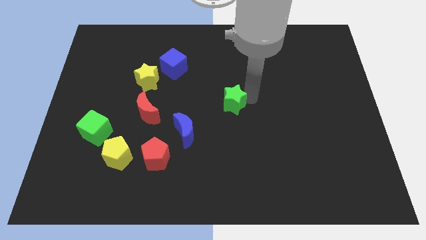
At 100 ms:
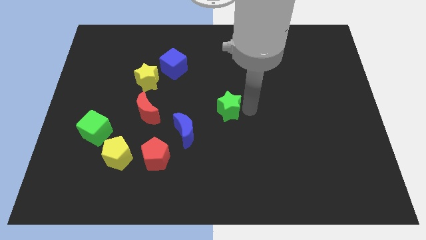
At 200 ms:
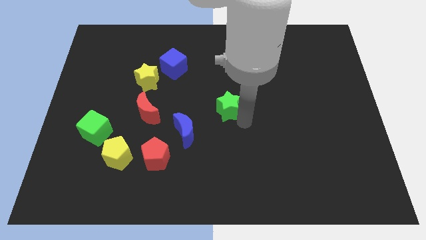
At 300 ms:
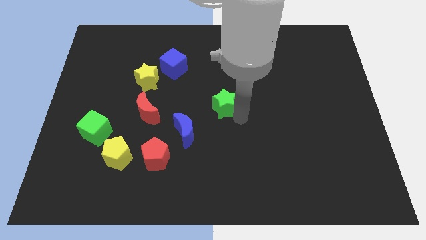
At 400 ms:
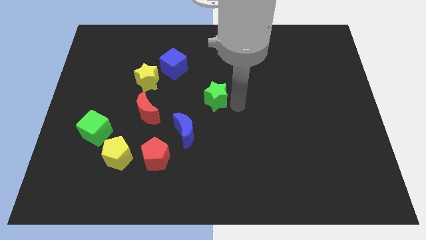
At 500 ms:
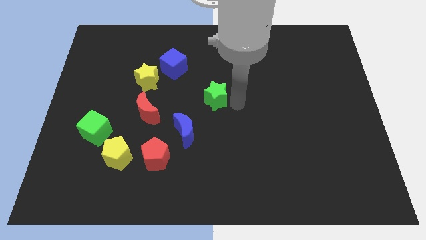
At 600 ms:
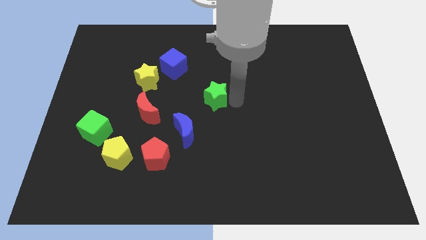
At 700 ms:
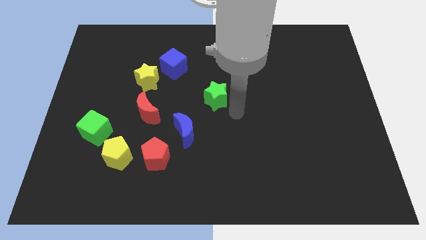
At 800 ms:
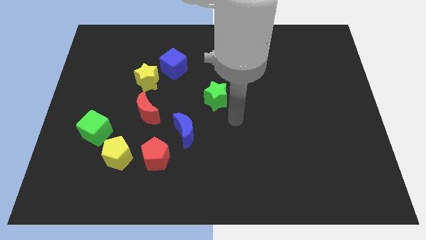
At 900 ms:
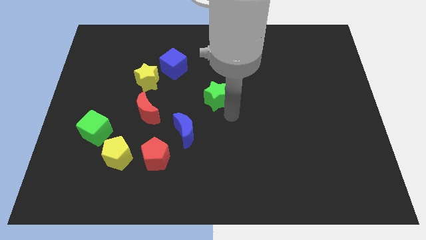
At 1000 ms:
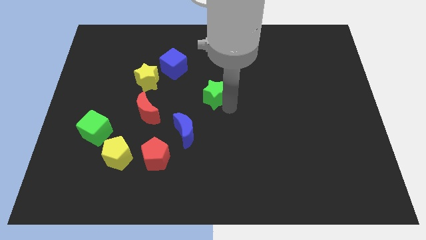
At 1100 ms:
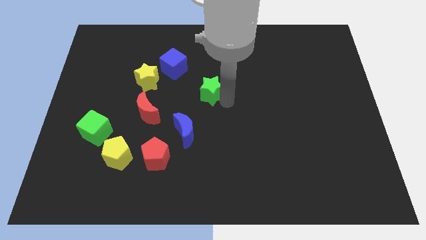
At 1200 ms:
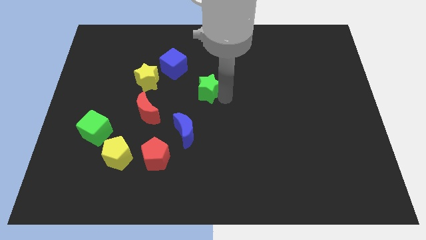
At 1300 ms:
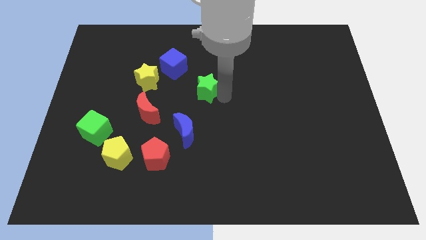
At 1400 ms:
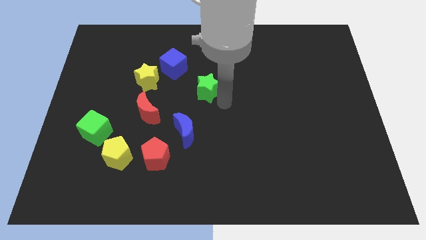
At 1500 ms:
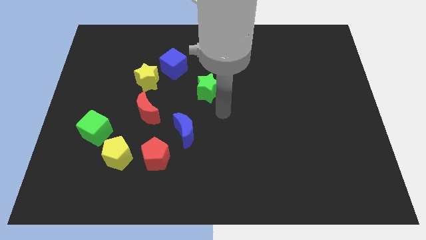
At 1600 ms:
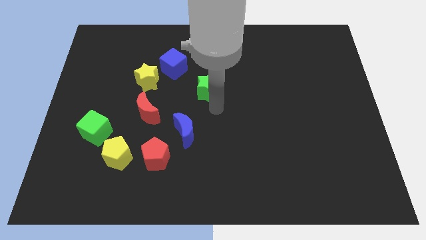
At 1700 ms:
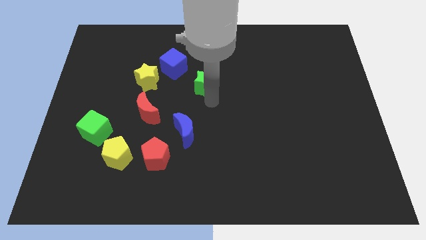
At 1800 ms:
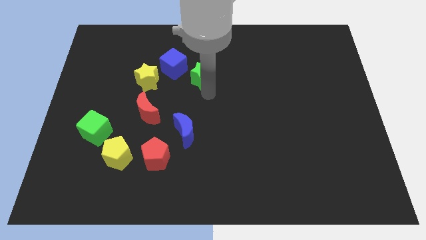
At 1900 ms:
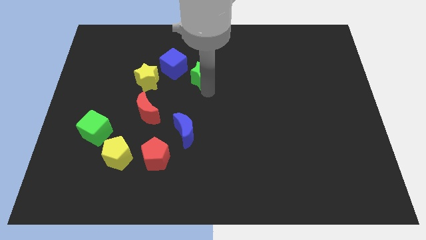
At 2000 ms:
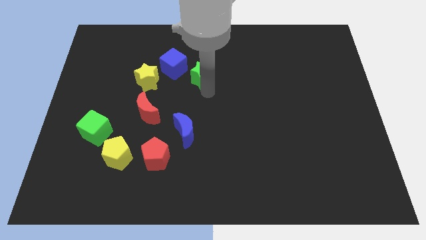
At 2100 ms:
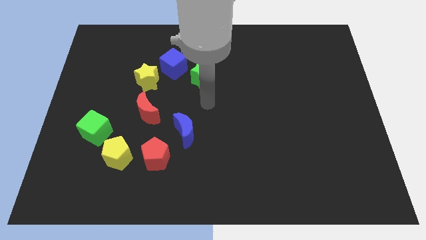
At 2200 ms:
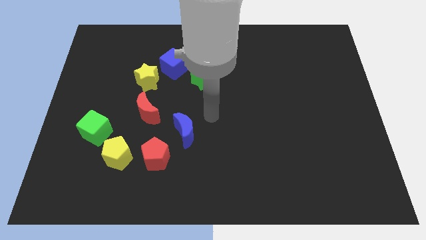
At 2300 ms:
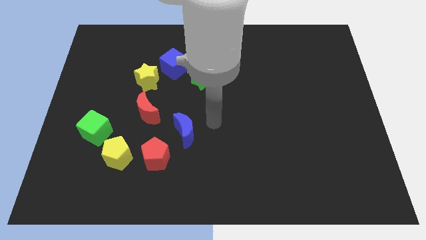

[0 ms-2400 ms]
put the green star parallel to the yellow star

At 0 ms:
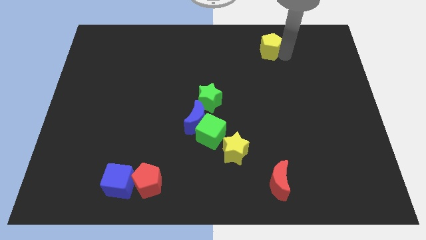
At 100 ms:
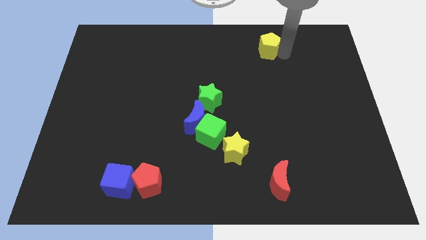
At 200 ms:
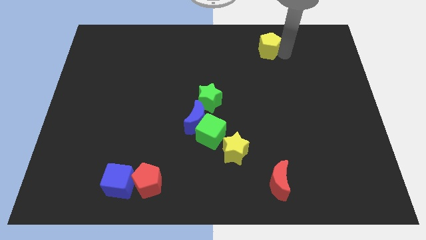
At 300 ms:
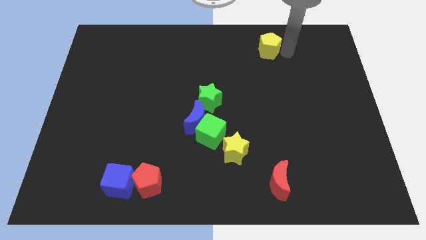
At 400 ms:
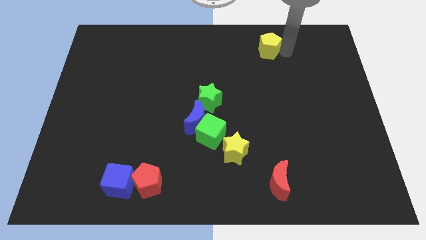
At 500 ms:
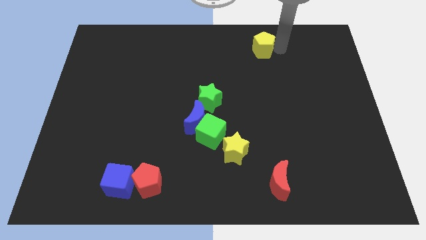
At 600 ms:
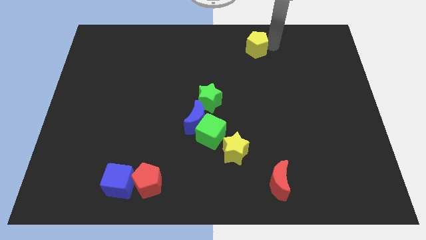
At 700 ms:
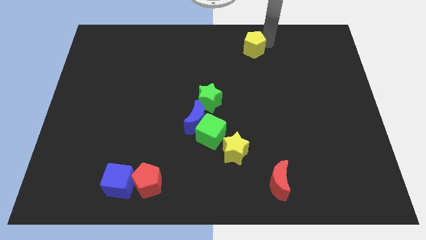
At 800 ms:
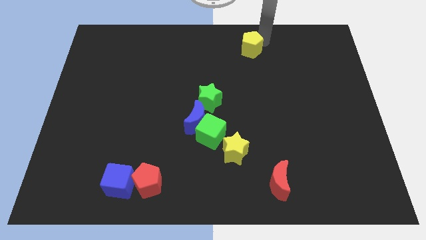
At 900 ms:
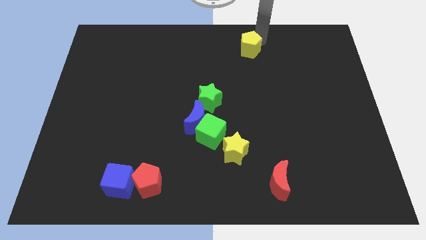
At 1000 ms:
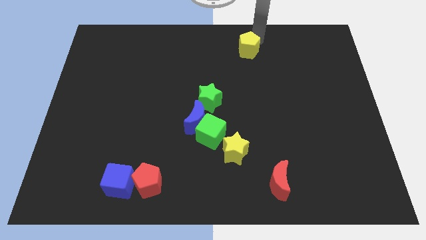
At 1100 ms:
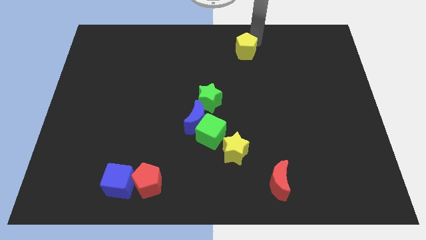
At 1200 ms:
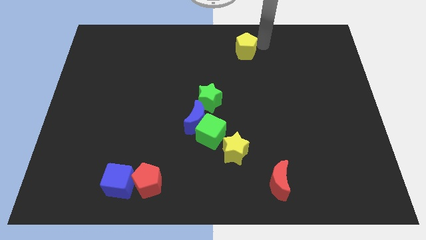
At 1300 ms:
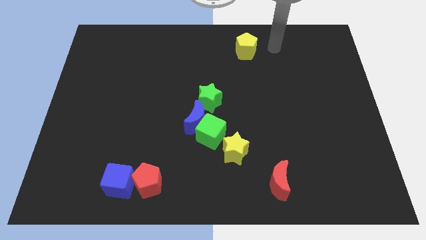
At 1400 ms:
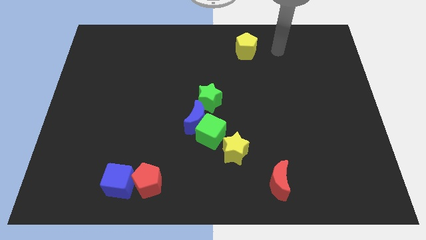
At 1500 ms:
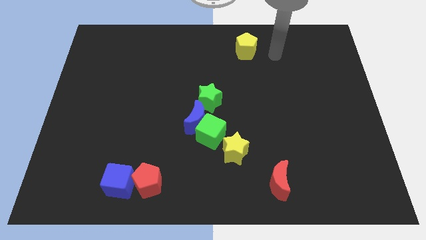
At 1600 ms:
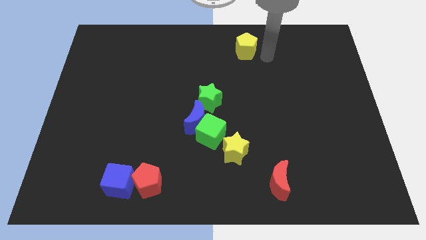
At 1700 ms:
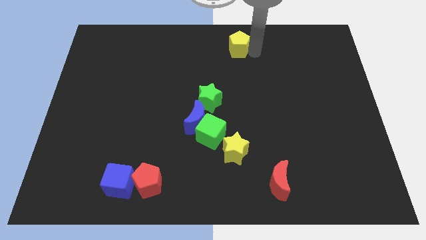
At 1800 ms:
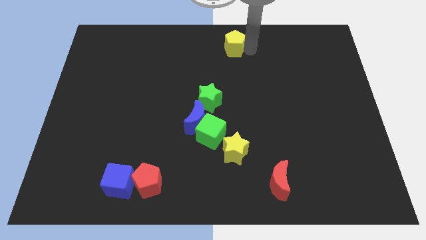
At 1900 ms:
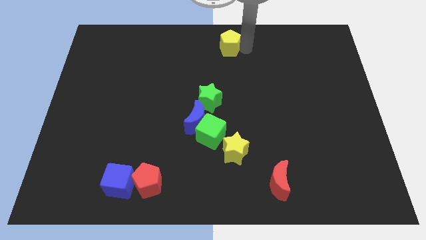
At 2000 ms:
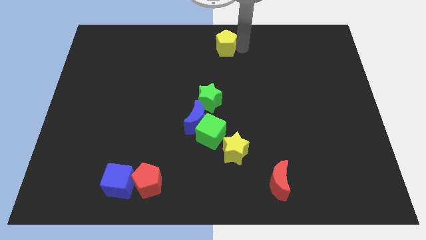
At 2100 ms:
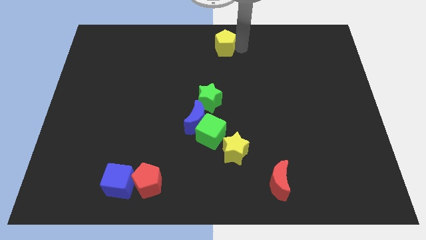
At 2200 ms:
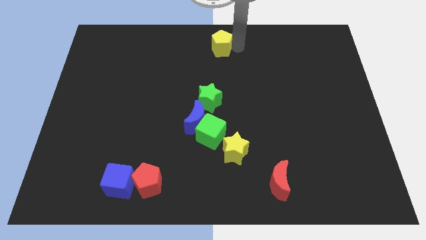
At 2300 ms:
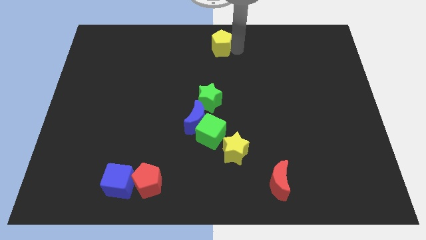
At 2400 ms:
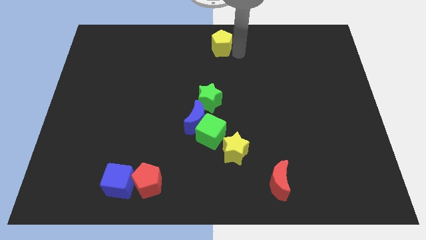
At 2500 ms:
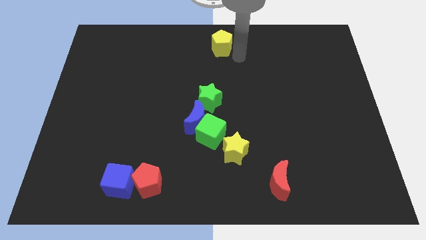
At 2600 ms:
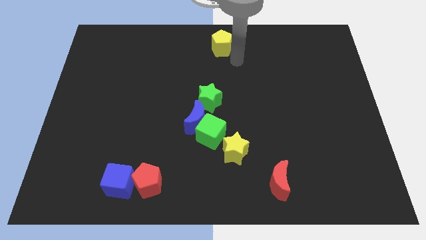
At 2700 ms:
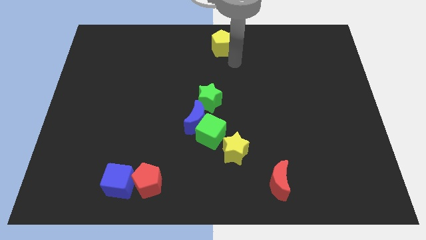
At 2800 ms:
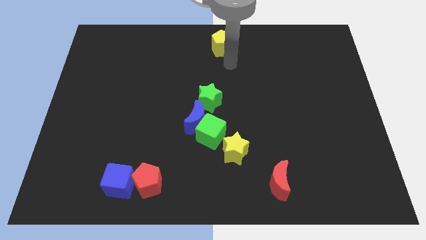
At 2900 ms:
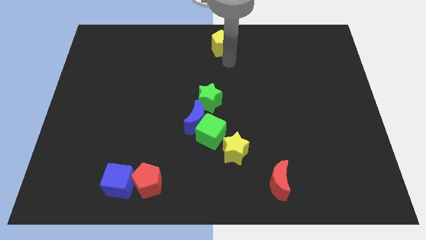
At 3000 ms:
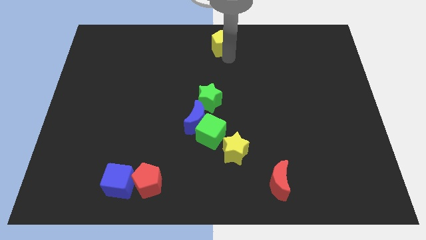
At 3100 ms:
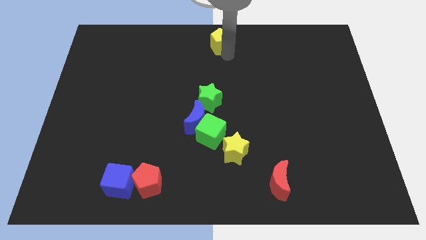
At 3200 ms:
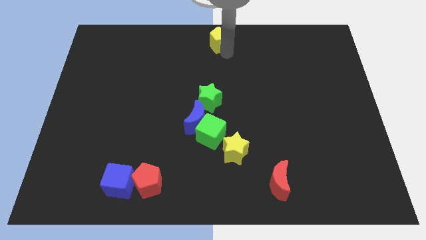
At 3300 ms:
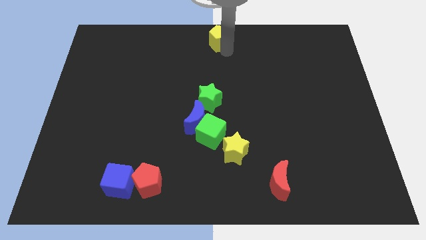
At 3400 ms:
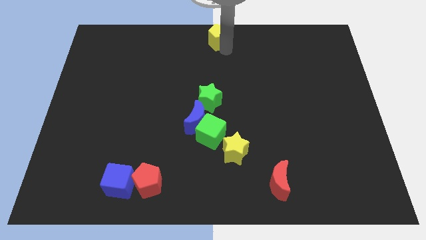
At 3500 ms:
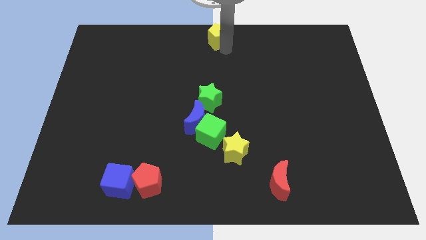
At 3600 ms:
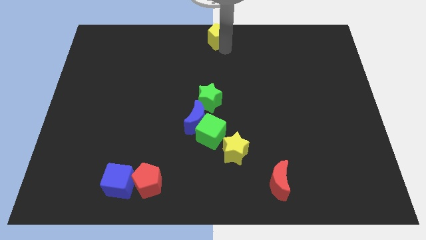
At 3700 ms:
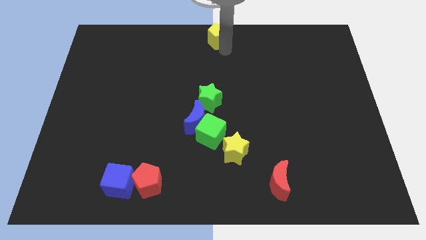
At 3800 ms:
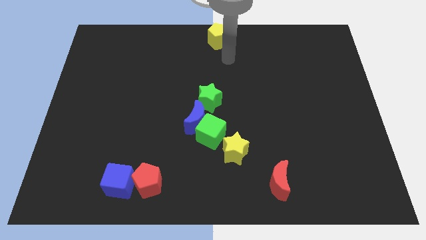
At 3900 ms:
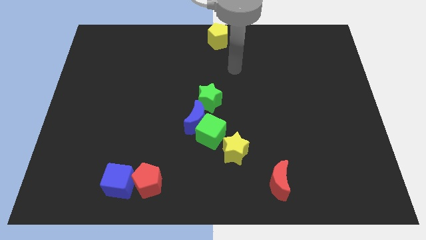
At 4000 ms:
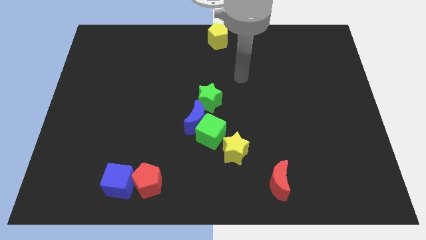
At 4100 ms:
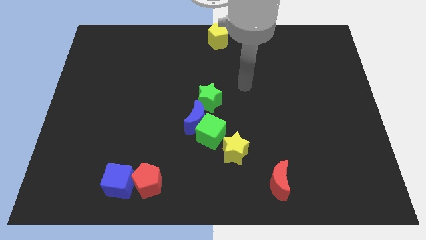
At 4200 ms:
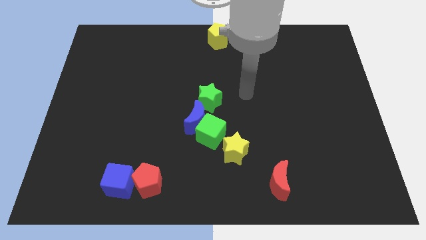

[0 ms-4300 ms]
move the yellow pentagon to the top side center

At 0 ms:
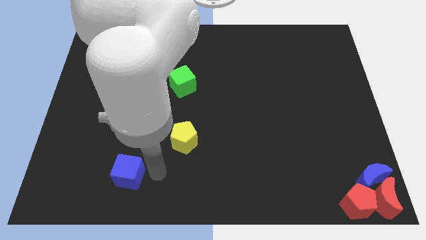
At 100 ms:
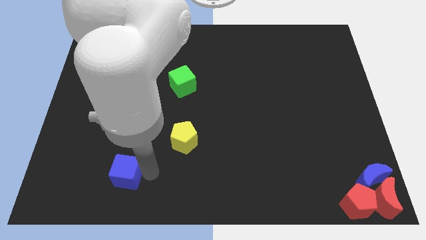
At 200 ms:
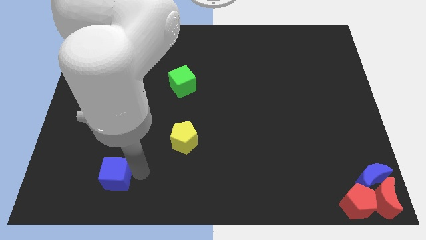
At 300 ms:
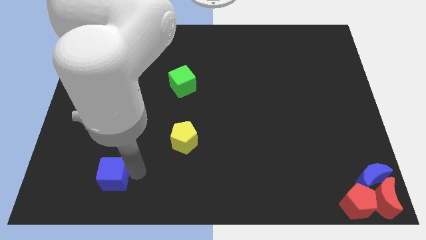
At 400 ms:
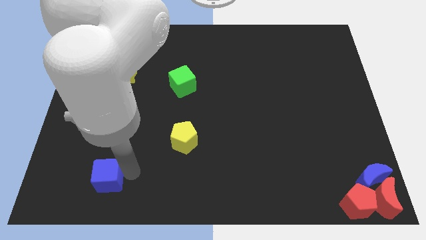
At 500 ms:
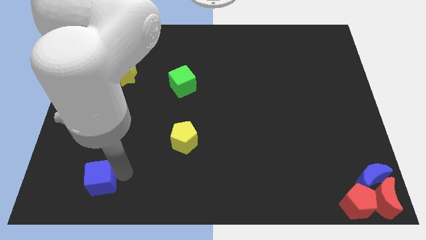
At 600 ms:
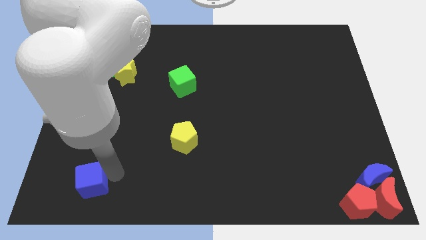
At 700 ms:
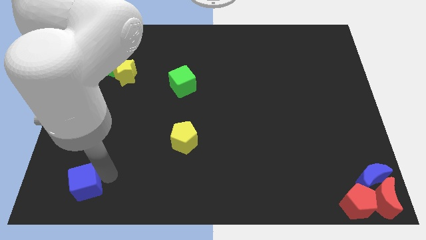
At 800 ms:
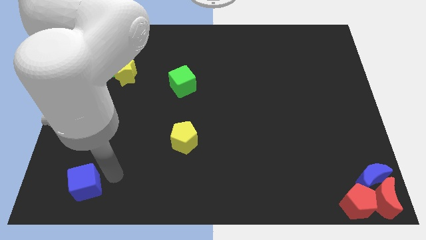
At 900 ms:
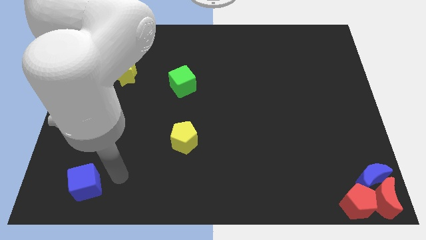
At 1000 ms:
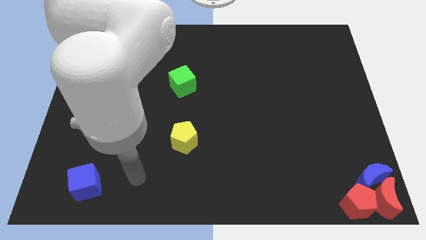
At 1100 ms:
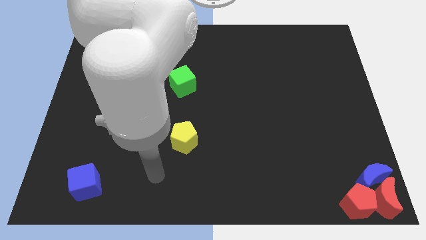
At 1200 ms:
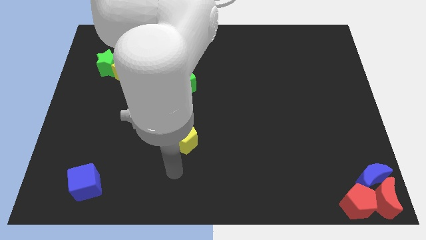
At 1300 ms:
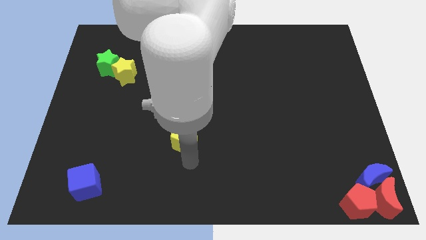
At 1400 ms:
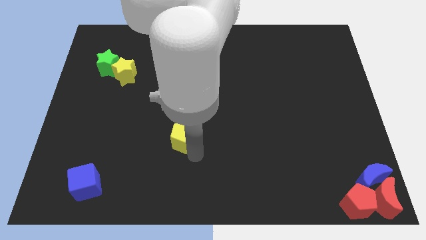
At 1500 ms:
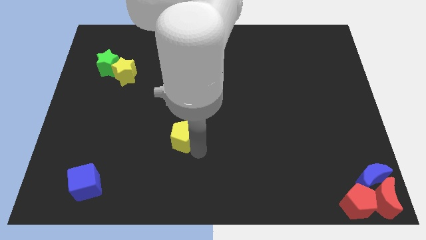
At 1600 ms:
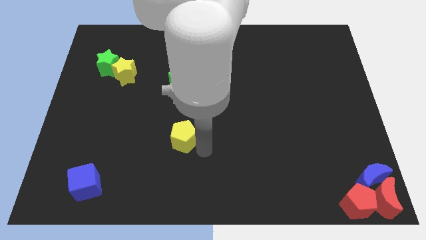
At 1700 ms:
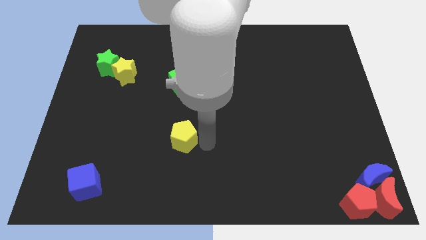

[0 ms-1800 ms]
move the blue cube at the bottom left corner of the board

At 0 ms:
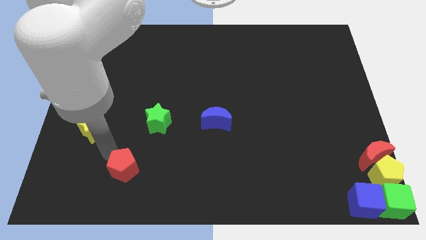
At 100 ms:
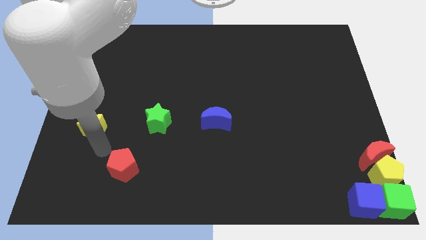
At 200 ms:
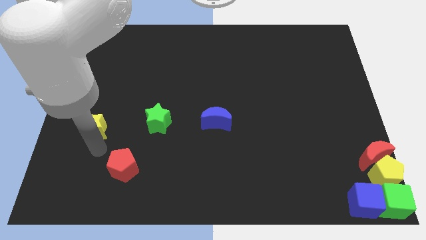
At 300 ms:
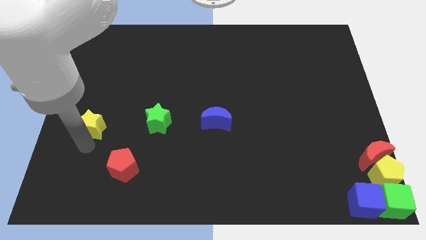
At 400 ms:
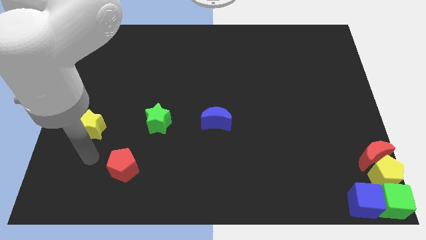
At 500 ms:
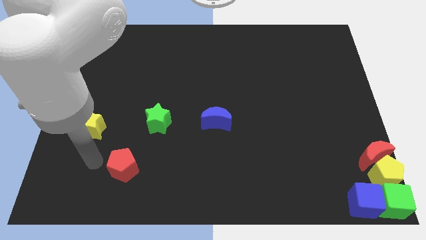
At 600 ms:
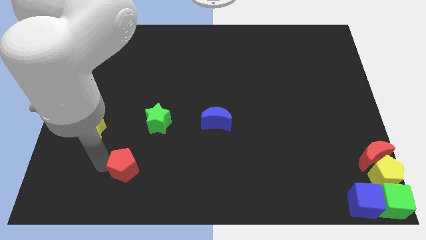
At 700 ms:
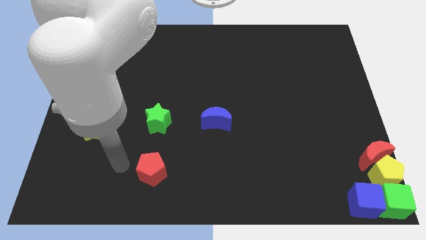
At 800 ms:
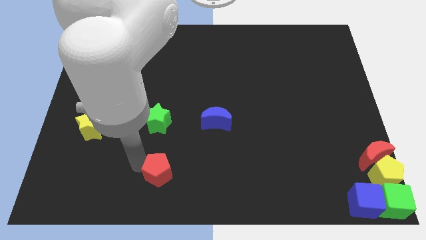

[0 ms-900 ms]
place the red pentagon below the green star
